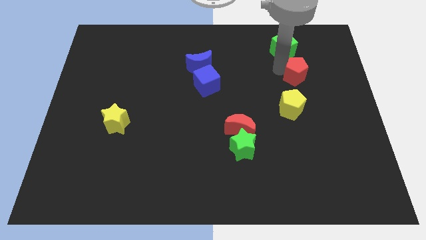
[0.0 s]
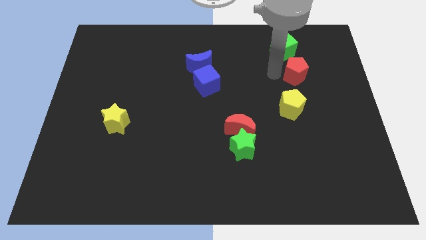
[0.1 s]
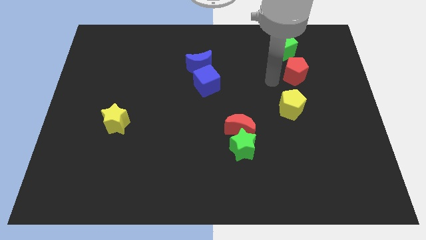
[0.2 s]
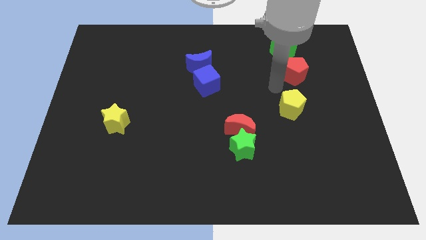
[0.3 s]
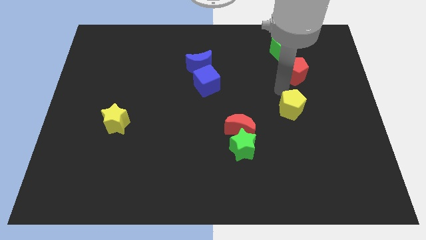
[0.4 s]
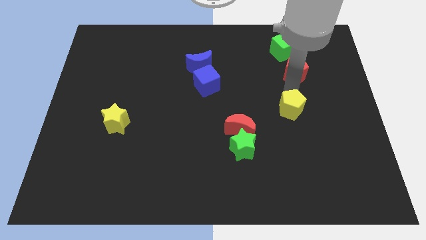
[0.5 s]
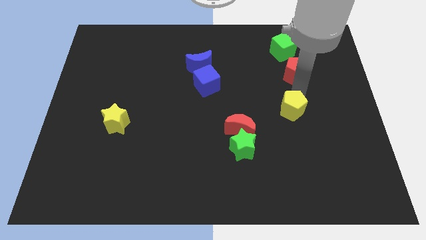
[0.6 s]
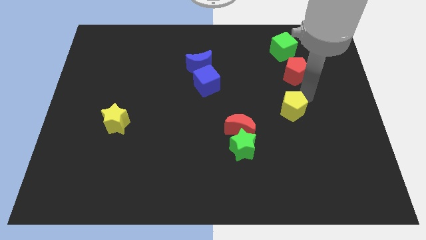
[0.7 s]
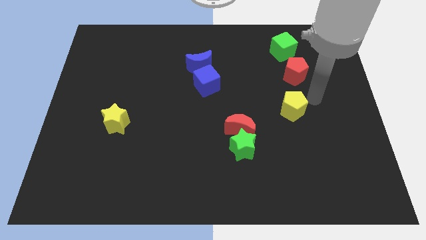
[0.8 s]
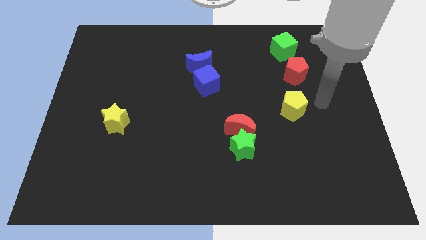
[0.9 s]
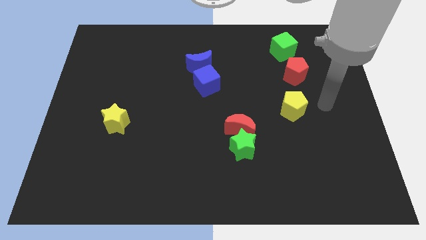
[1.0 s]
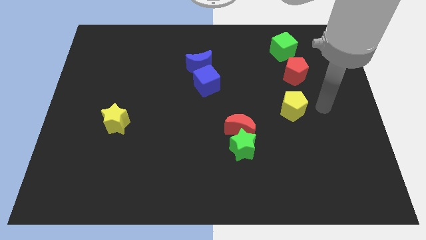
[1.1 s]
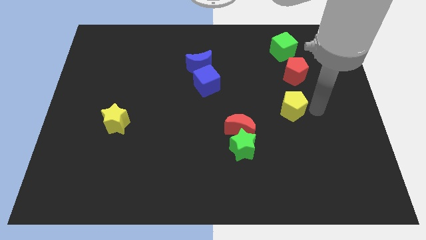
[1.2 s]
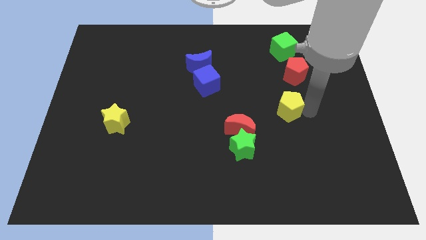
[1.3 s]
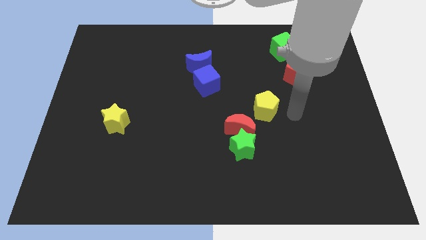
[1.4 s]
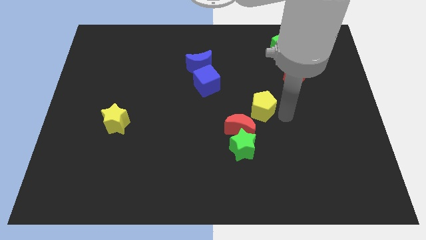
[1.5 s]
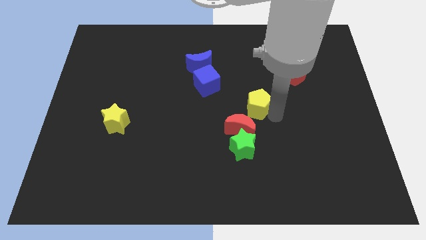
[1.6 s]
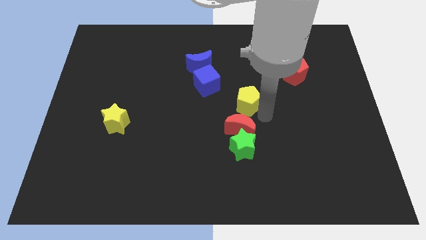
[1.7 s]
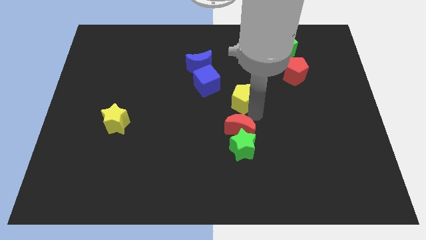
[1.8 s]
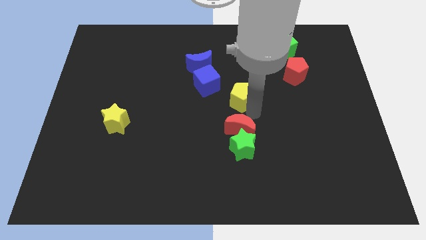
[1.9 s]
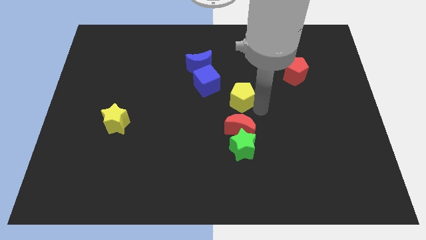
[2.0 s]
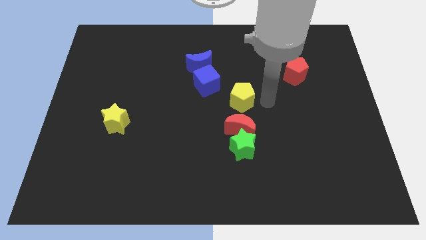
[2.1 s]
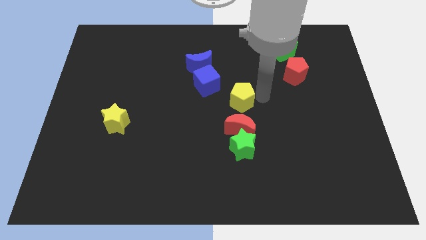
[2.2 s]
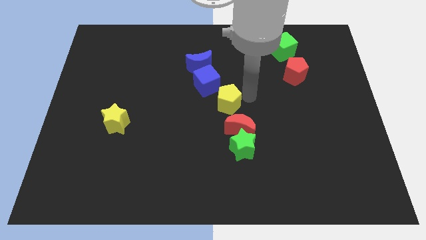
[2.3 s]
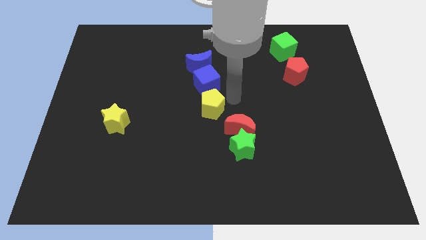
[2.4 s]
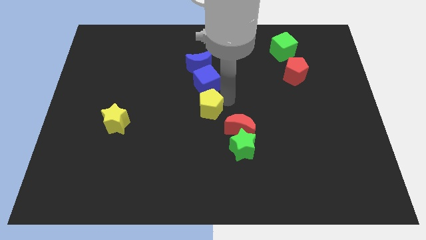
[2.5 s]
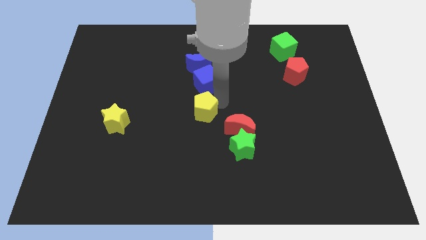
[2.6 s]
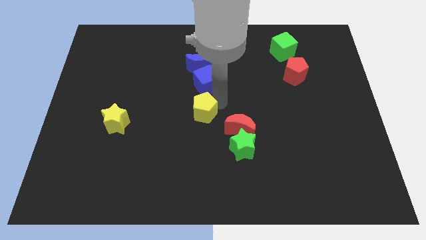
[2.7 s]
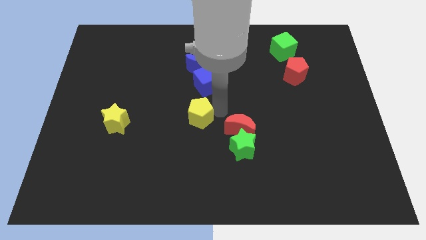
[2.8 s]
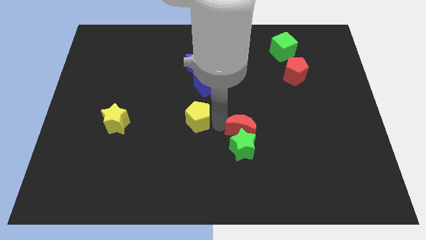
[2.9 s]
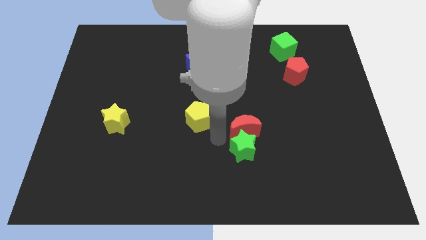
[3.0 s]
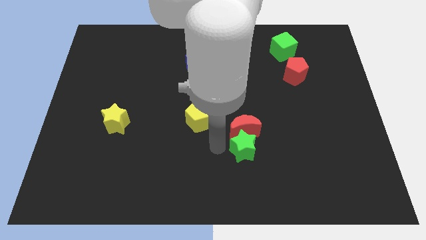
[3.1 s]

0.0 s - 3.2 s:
move the yellow pentagon diagonally bottom left to the green cube

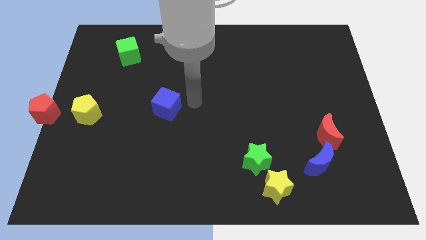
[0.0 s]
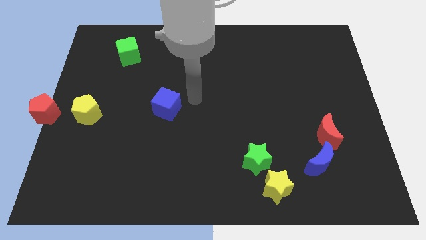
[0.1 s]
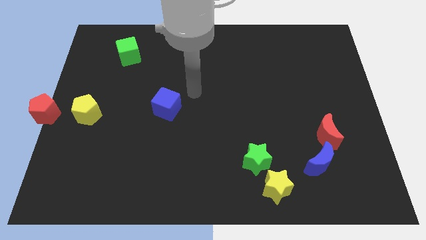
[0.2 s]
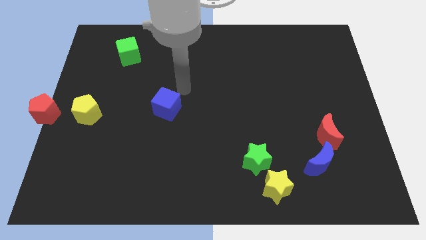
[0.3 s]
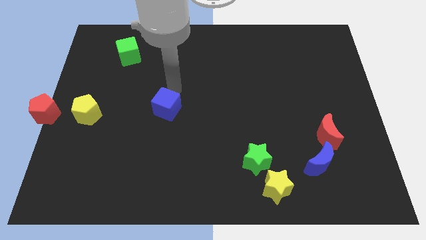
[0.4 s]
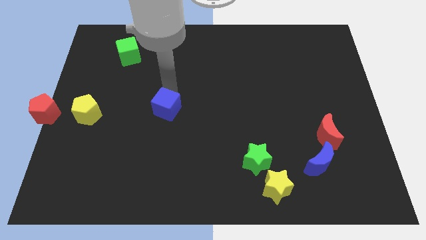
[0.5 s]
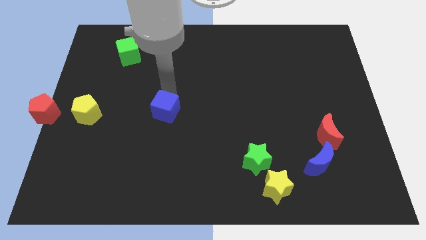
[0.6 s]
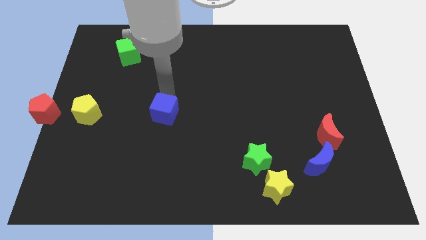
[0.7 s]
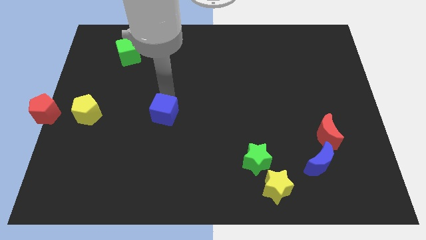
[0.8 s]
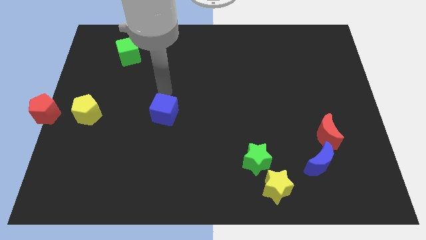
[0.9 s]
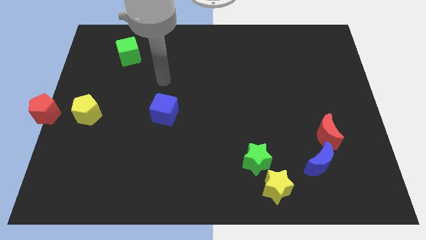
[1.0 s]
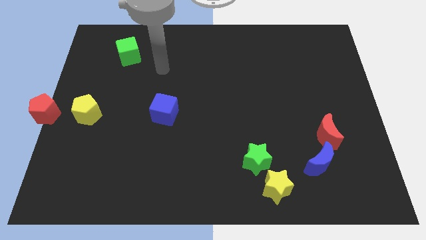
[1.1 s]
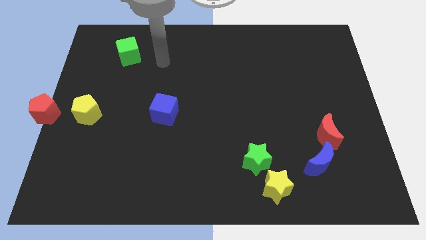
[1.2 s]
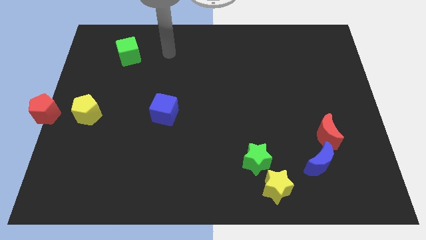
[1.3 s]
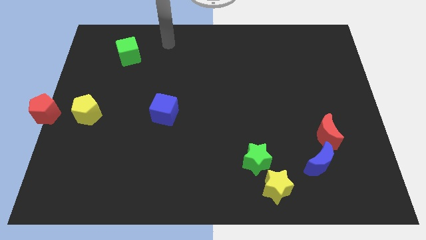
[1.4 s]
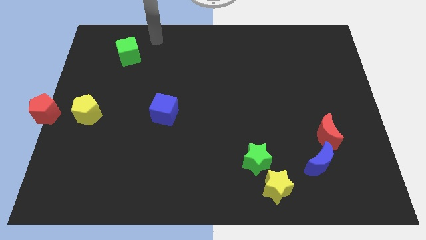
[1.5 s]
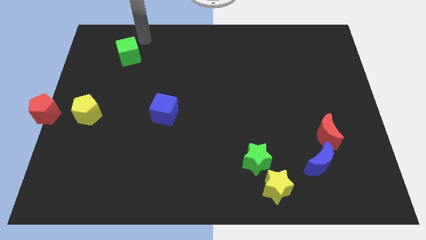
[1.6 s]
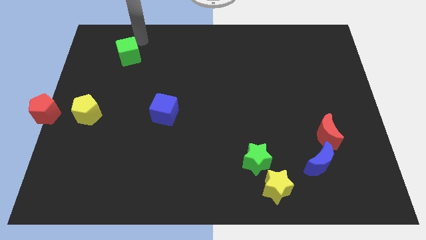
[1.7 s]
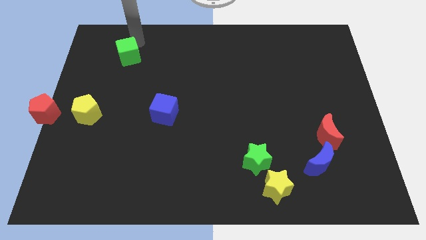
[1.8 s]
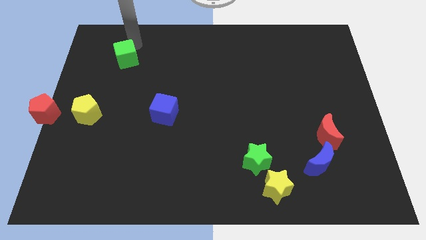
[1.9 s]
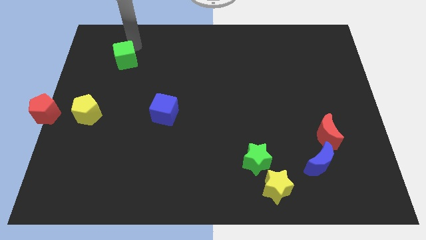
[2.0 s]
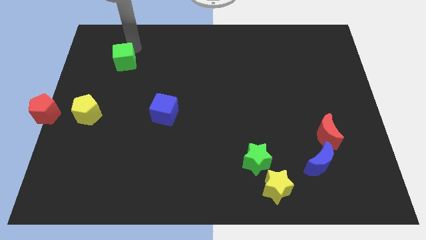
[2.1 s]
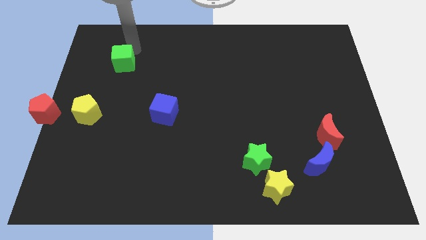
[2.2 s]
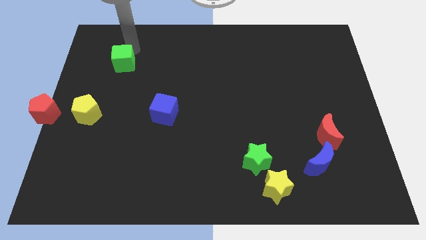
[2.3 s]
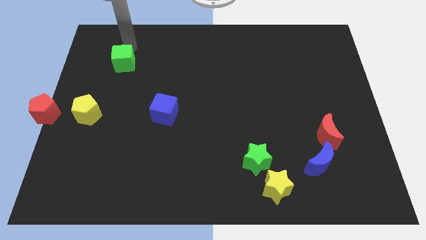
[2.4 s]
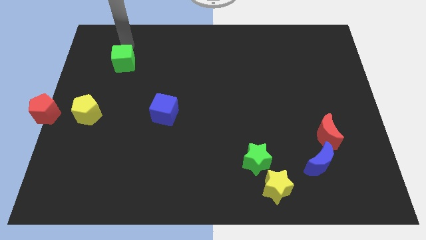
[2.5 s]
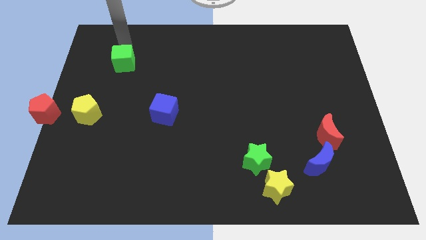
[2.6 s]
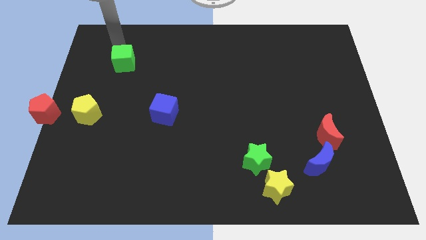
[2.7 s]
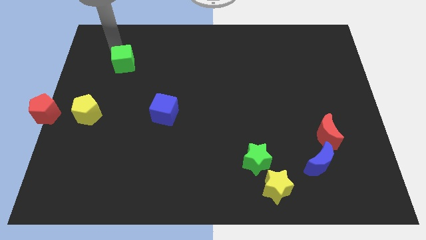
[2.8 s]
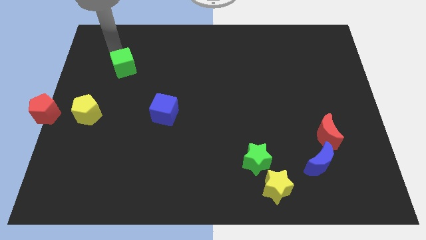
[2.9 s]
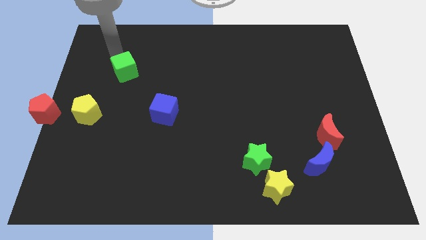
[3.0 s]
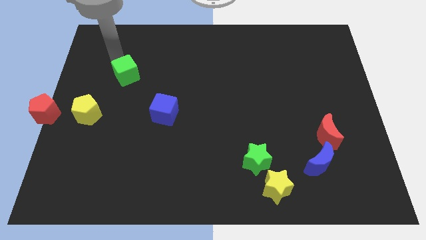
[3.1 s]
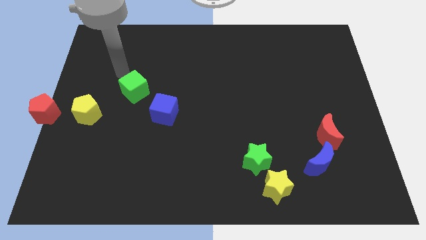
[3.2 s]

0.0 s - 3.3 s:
make a triangle out of yellow pentagon green and the blue cube

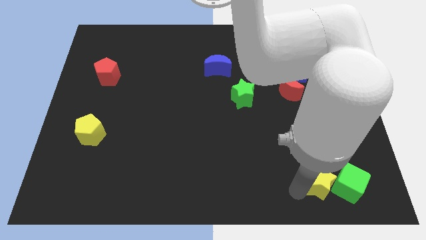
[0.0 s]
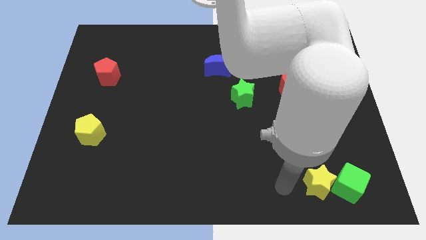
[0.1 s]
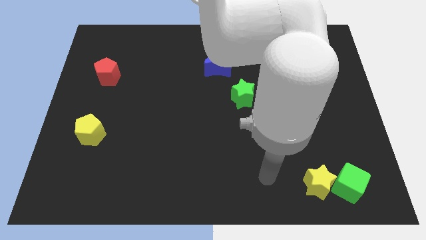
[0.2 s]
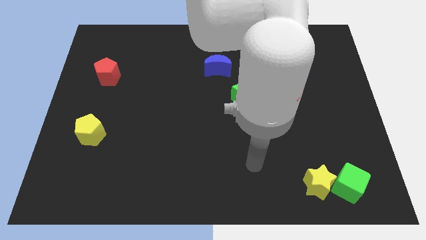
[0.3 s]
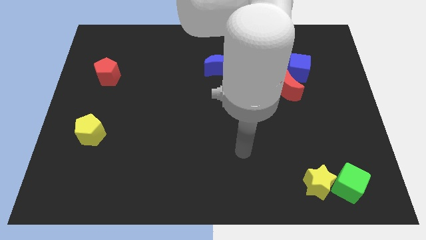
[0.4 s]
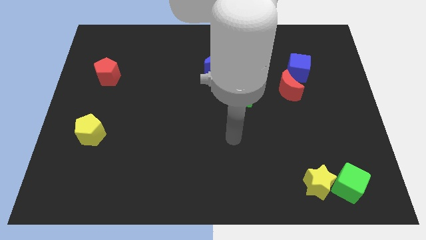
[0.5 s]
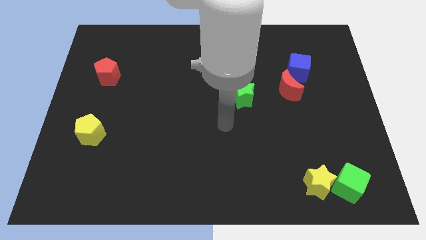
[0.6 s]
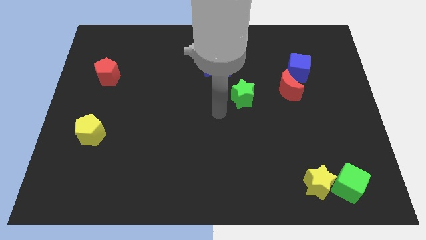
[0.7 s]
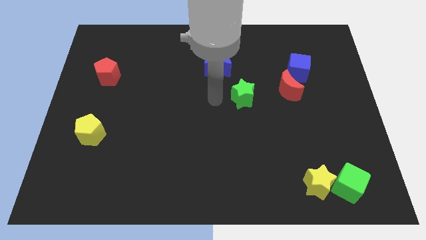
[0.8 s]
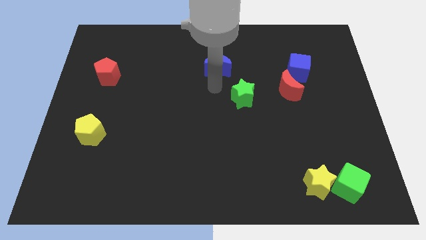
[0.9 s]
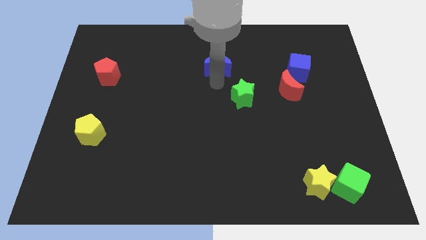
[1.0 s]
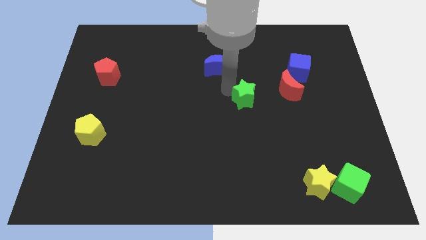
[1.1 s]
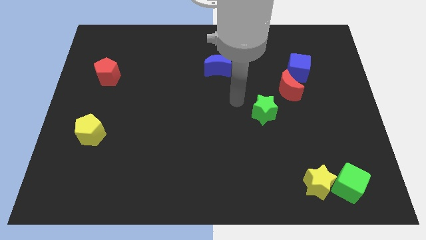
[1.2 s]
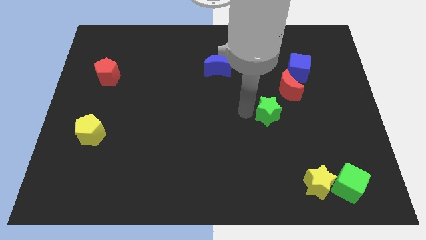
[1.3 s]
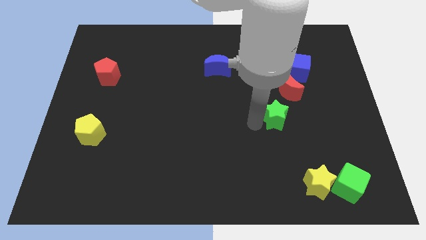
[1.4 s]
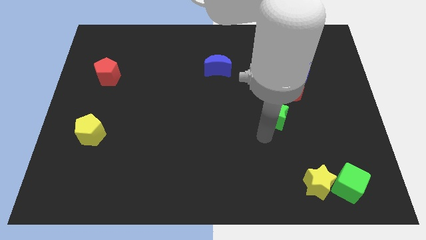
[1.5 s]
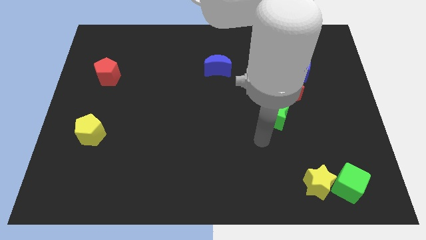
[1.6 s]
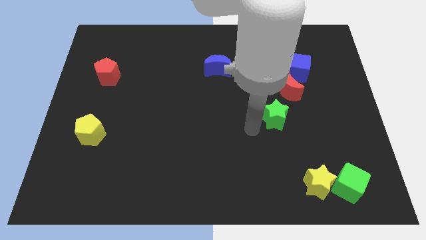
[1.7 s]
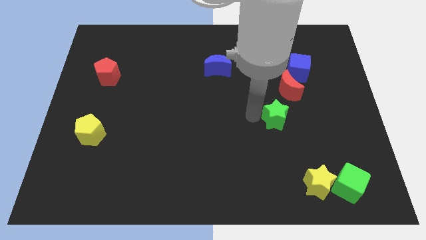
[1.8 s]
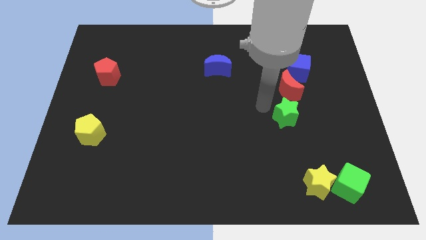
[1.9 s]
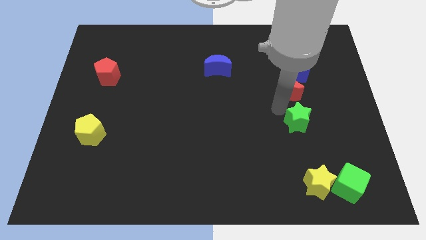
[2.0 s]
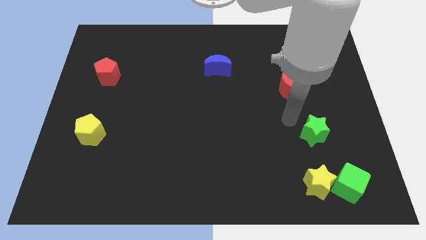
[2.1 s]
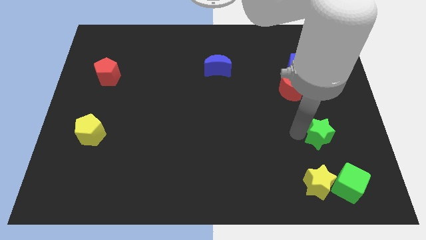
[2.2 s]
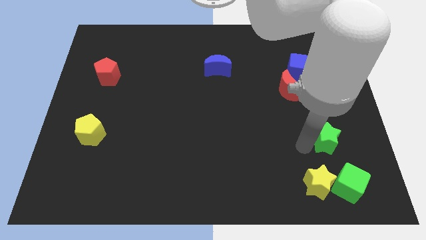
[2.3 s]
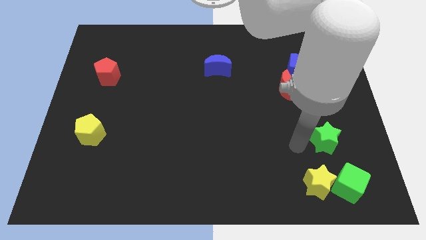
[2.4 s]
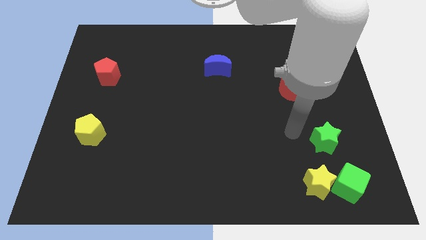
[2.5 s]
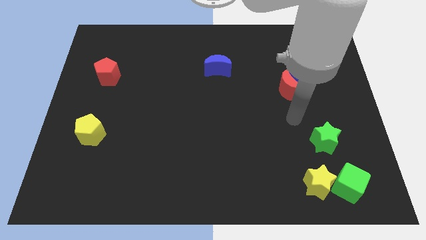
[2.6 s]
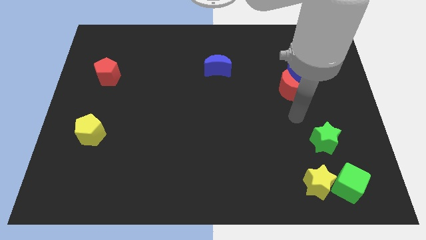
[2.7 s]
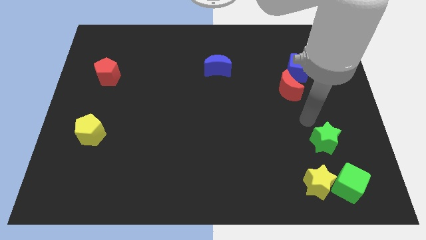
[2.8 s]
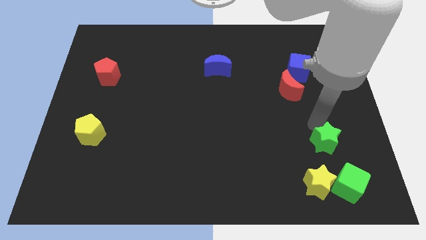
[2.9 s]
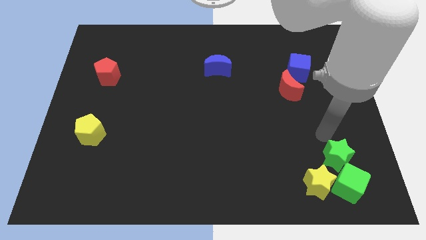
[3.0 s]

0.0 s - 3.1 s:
move the green star to the top of the green cube
